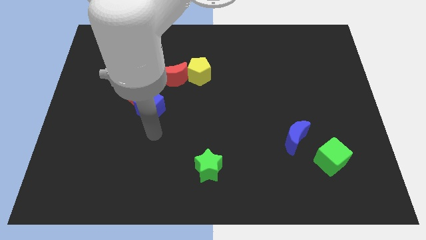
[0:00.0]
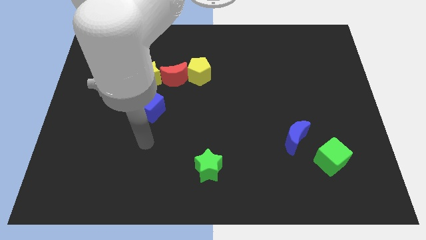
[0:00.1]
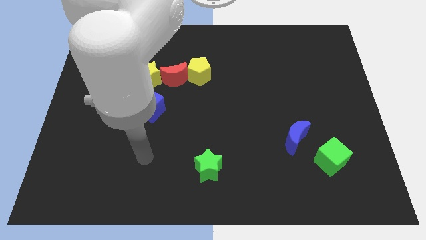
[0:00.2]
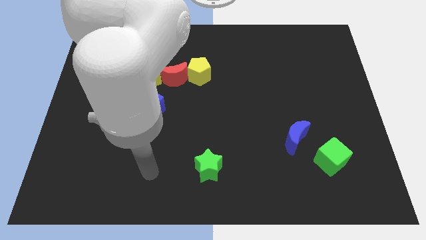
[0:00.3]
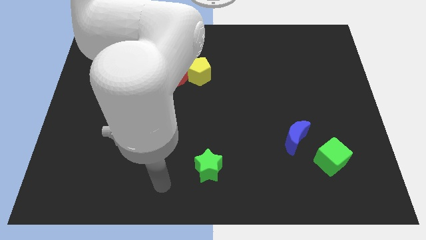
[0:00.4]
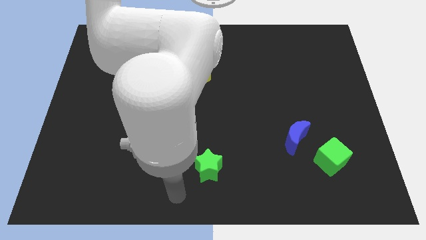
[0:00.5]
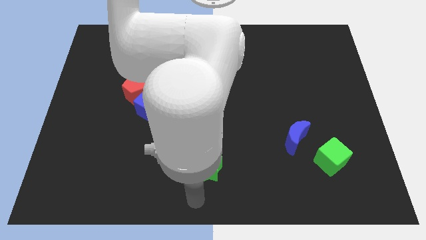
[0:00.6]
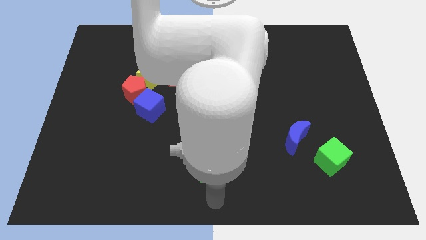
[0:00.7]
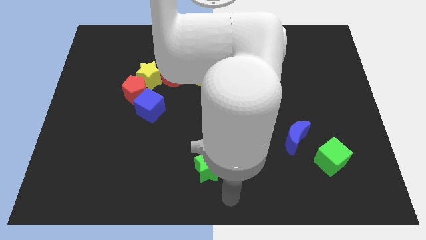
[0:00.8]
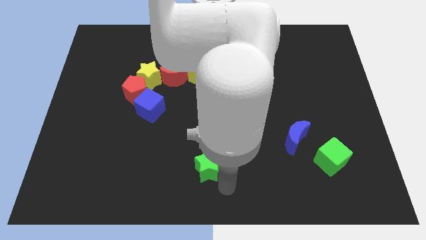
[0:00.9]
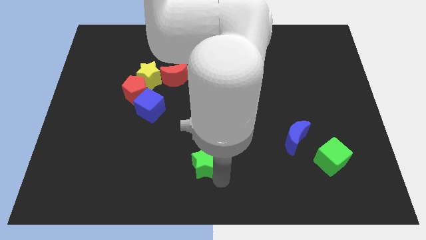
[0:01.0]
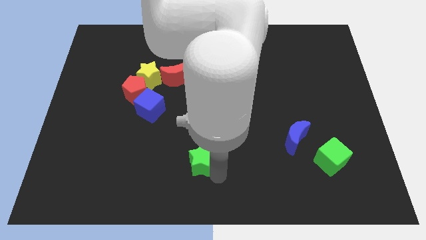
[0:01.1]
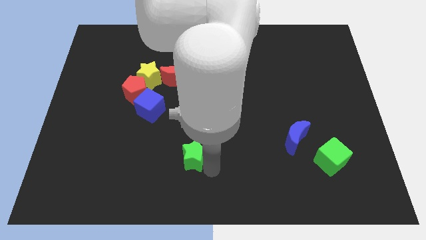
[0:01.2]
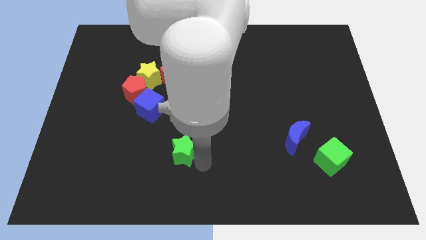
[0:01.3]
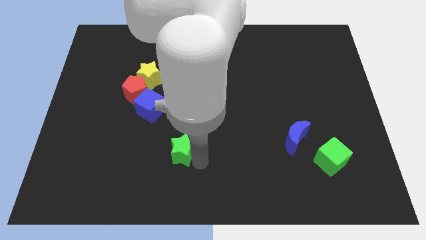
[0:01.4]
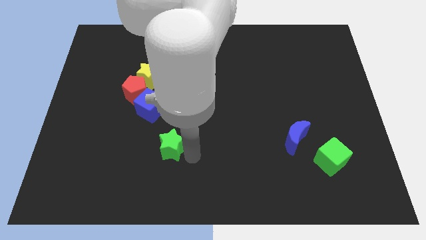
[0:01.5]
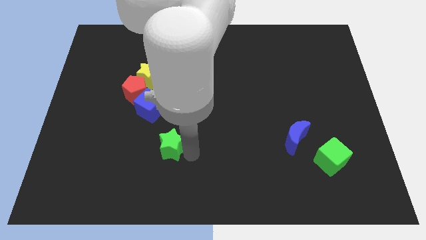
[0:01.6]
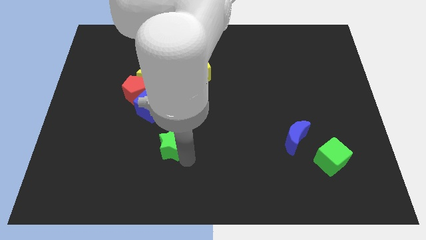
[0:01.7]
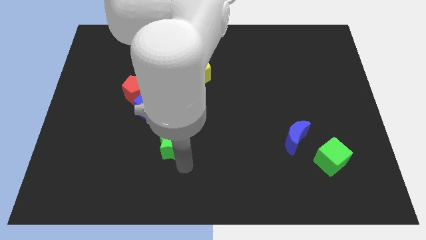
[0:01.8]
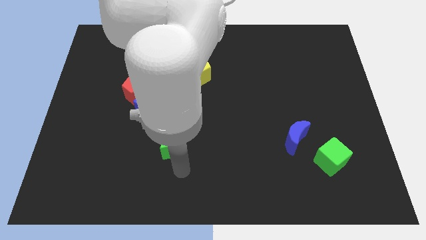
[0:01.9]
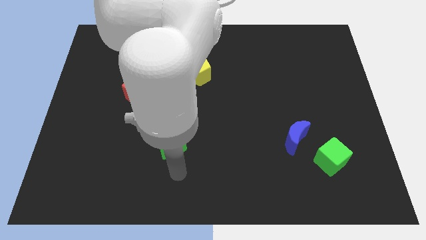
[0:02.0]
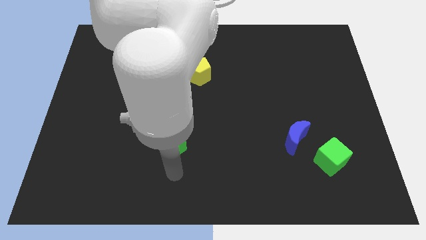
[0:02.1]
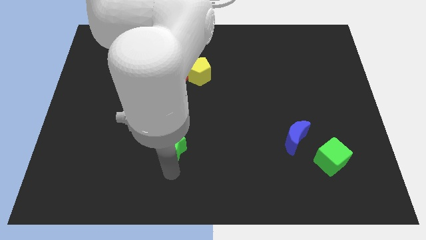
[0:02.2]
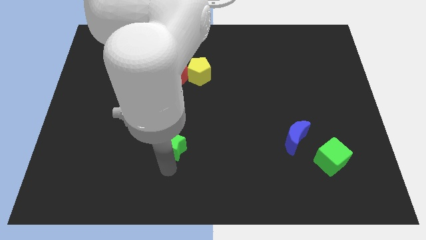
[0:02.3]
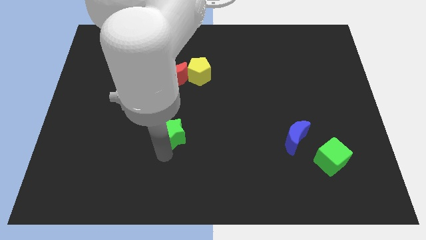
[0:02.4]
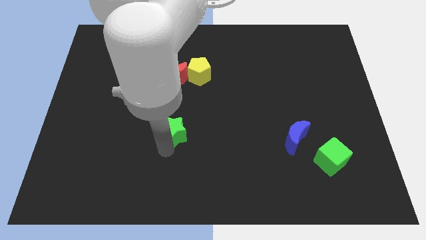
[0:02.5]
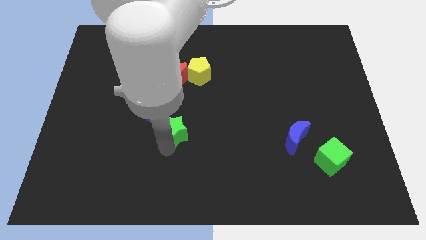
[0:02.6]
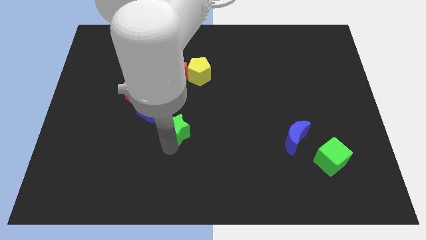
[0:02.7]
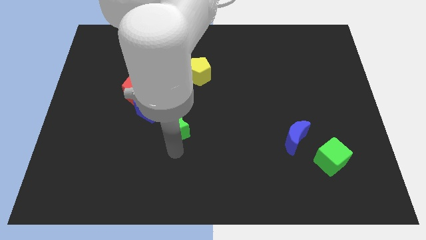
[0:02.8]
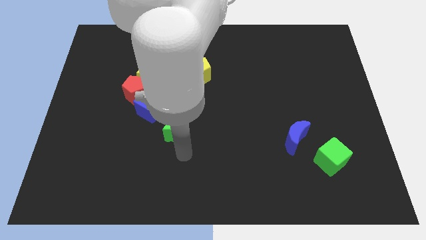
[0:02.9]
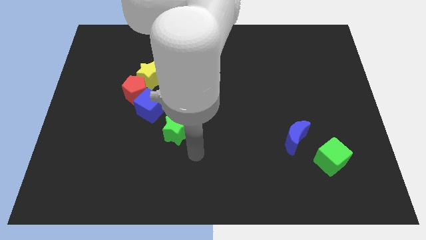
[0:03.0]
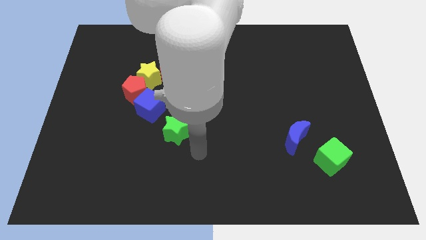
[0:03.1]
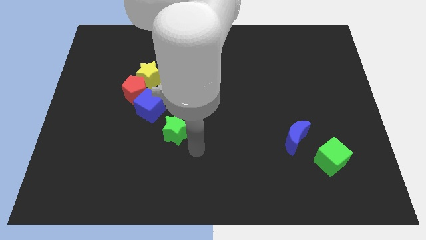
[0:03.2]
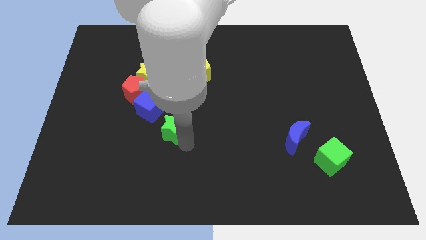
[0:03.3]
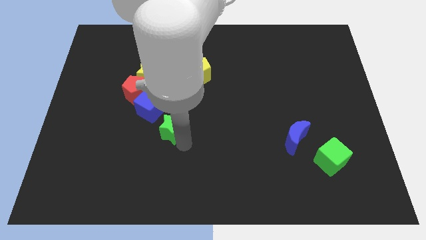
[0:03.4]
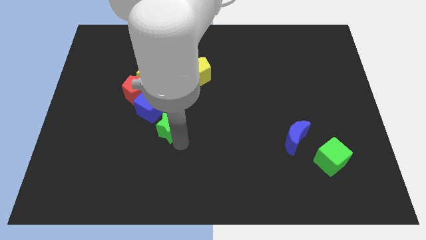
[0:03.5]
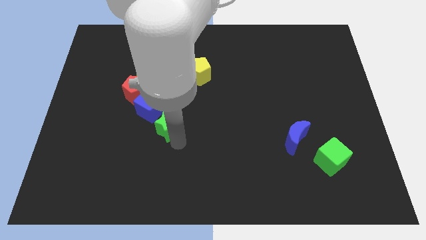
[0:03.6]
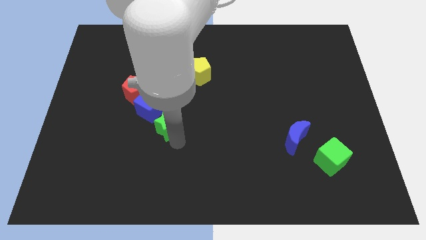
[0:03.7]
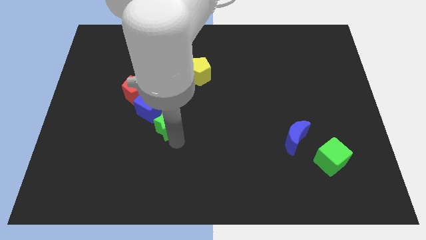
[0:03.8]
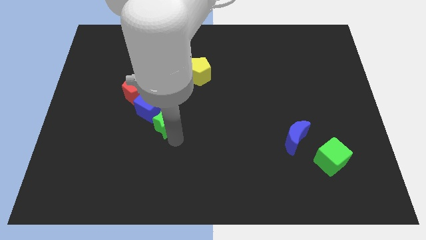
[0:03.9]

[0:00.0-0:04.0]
push the green star to the bottom right of the blue cube

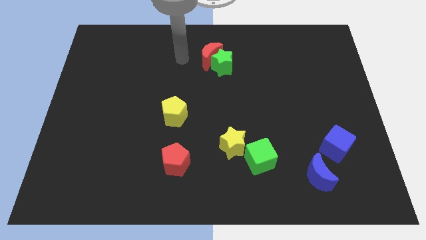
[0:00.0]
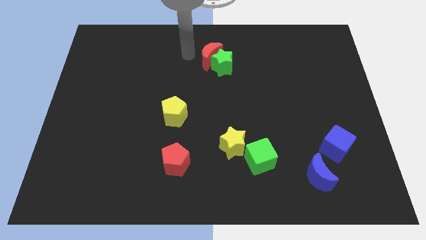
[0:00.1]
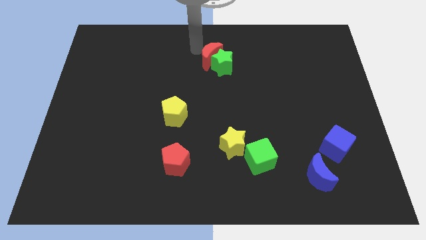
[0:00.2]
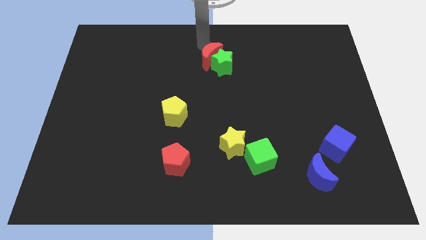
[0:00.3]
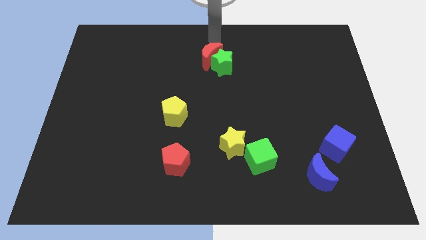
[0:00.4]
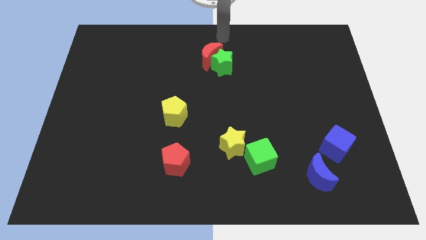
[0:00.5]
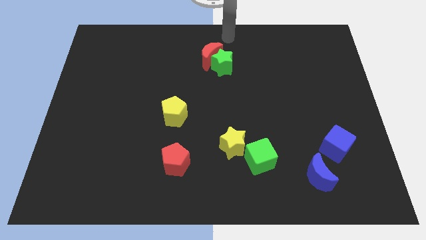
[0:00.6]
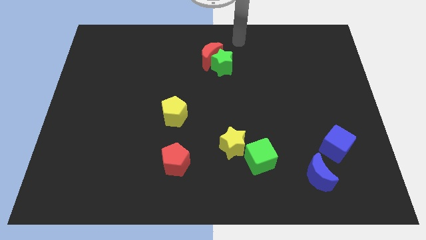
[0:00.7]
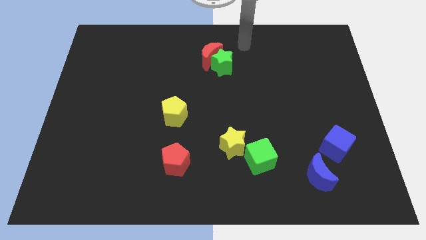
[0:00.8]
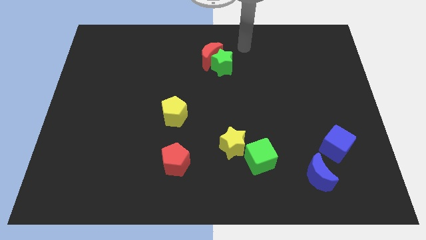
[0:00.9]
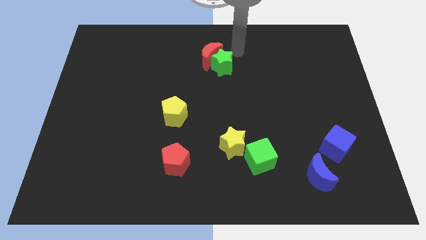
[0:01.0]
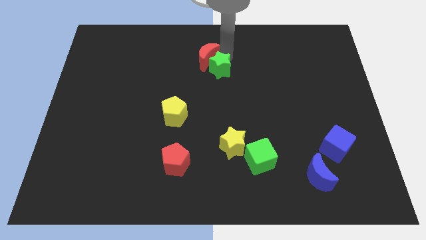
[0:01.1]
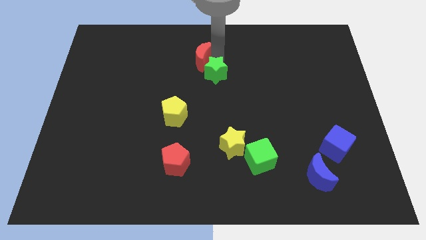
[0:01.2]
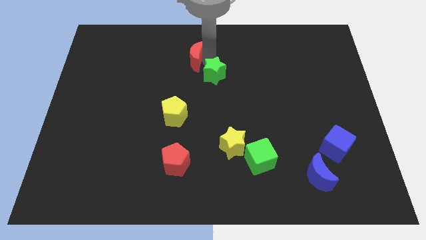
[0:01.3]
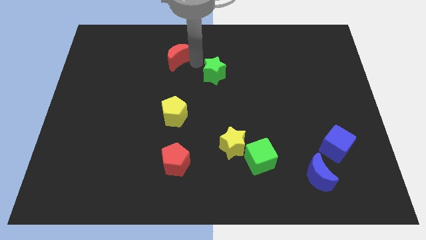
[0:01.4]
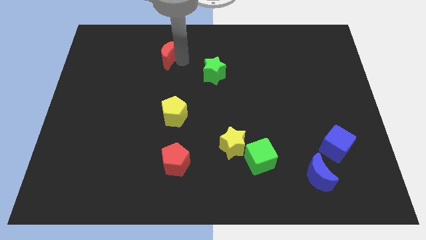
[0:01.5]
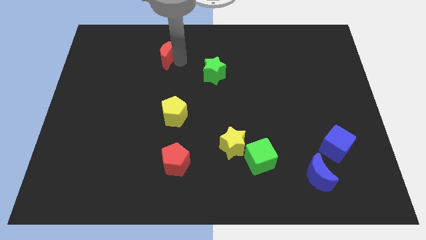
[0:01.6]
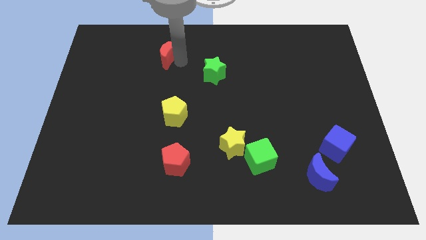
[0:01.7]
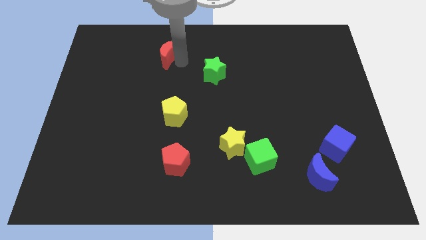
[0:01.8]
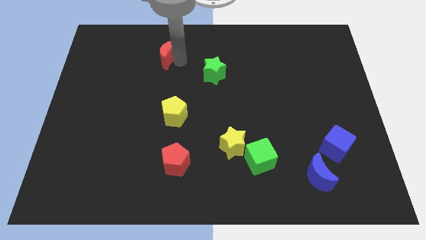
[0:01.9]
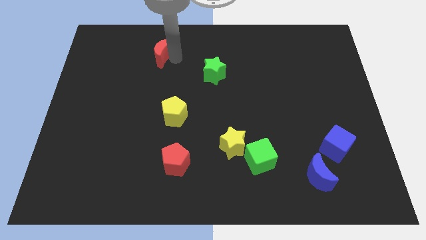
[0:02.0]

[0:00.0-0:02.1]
separate the red moon from the green star

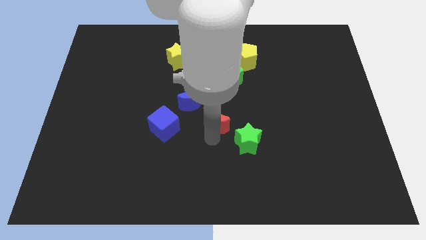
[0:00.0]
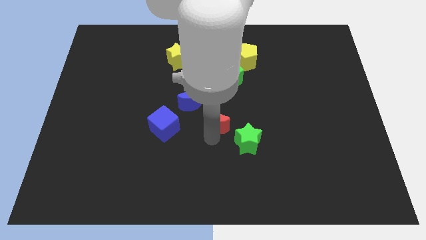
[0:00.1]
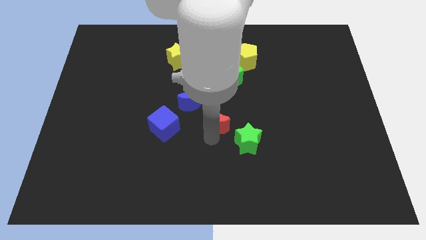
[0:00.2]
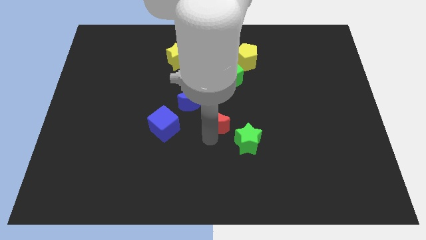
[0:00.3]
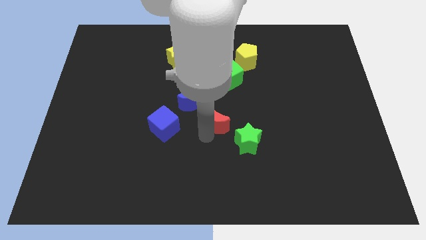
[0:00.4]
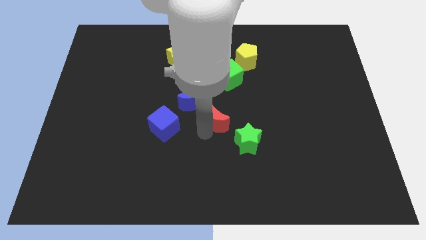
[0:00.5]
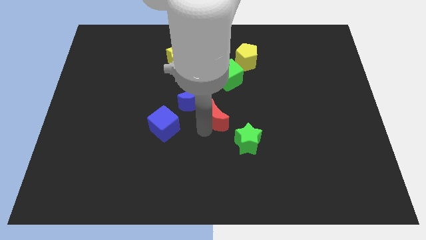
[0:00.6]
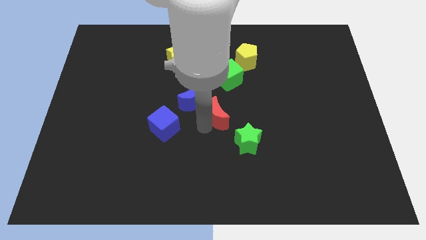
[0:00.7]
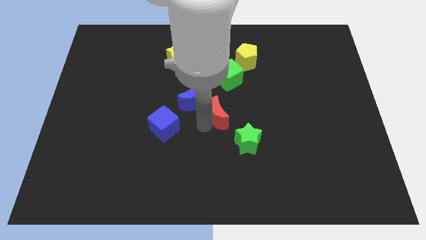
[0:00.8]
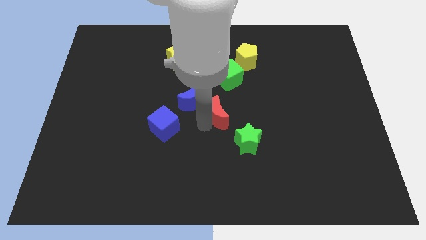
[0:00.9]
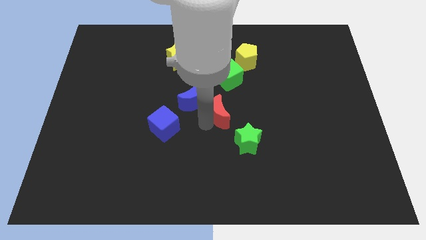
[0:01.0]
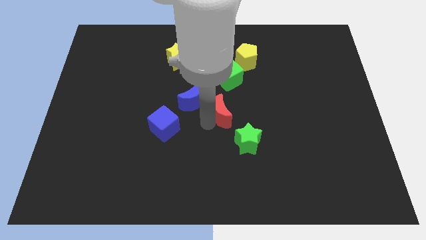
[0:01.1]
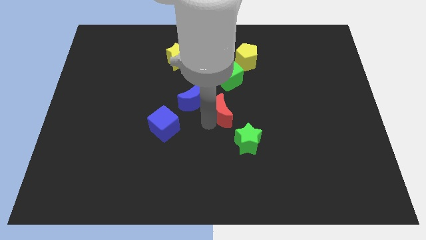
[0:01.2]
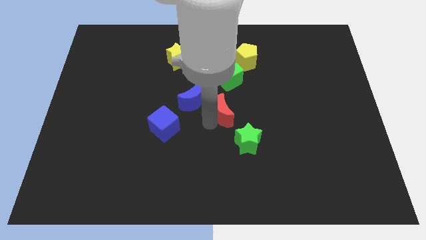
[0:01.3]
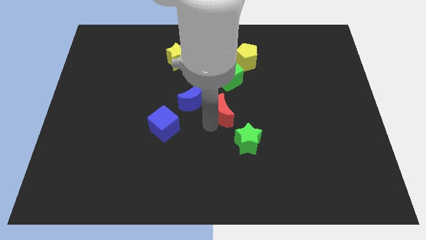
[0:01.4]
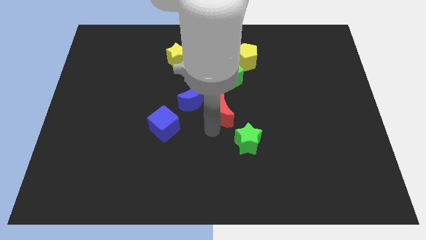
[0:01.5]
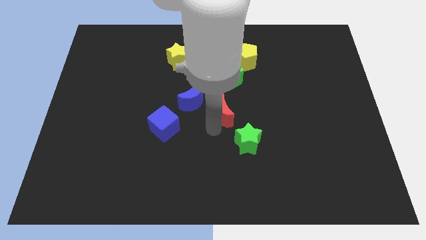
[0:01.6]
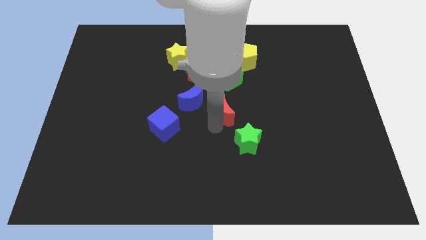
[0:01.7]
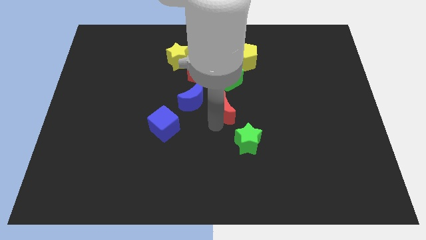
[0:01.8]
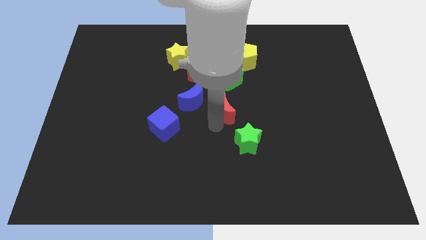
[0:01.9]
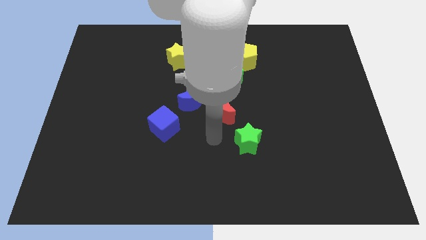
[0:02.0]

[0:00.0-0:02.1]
slightly push the red moon close to the green cube

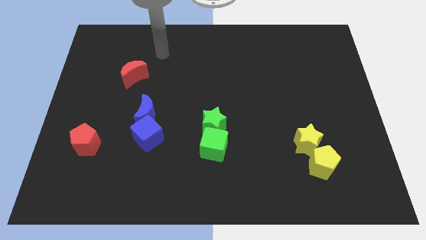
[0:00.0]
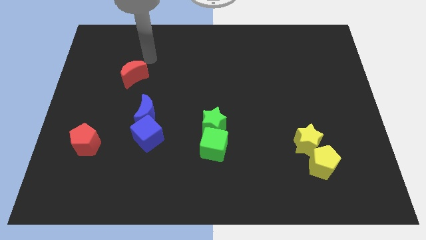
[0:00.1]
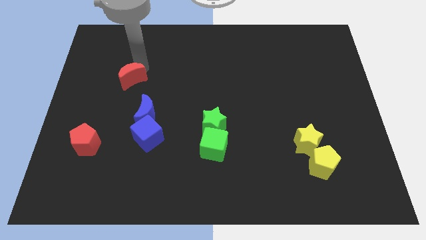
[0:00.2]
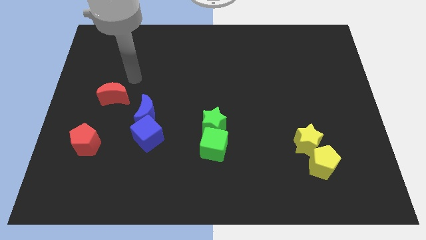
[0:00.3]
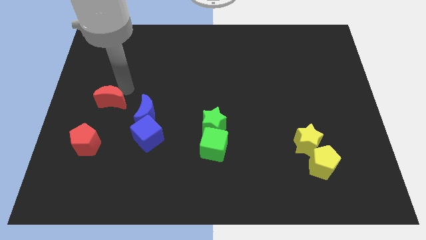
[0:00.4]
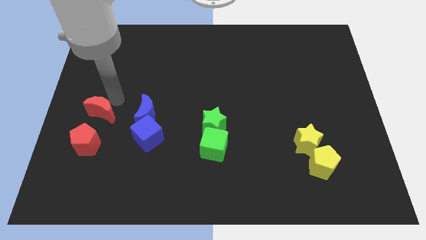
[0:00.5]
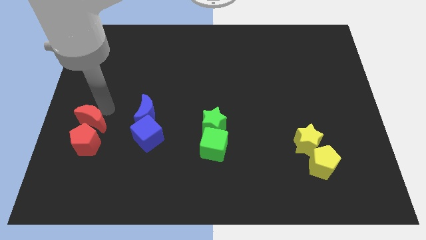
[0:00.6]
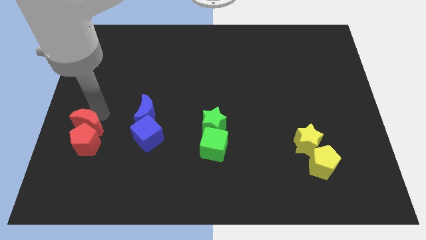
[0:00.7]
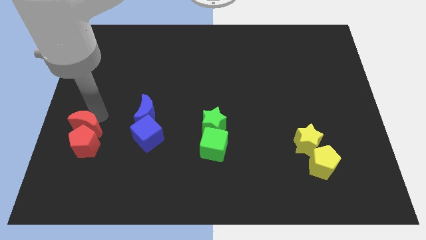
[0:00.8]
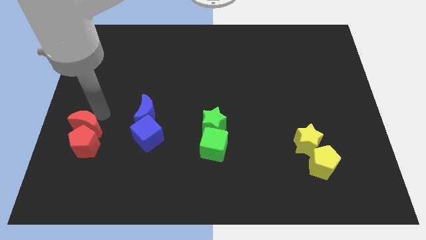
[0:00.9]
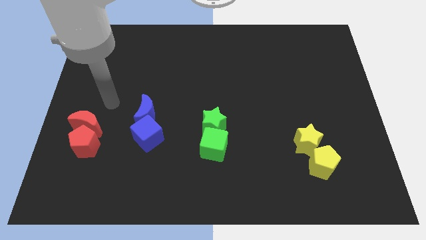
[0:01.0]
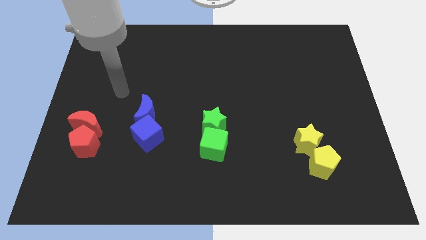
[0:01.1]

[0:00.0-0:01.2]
push the red moon into the red pentagon
